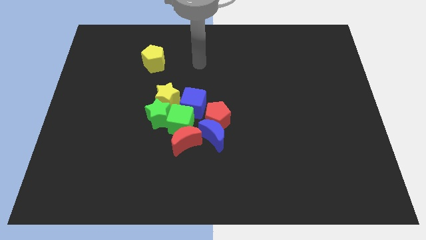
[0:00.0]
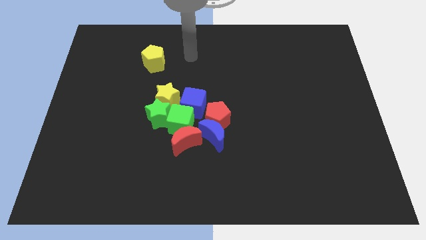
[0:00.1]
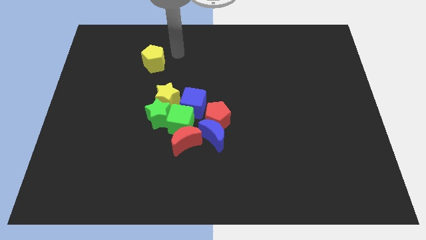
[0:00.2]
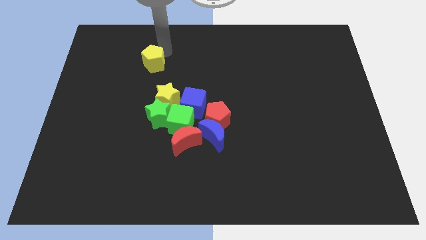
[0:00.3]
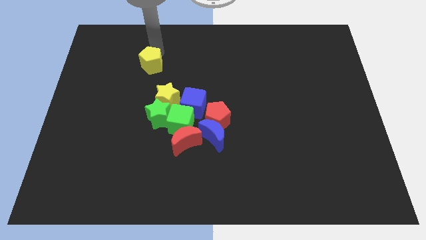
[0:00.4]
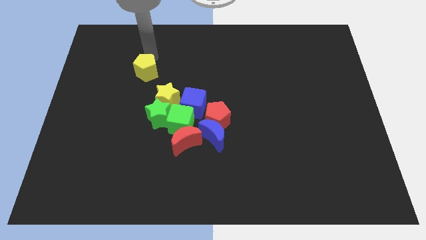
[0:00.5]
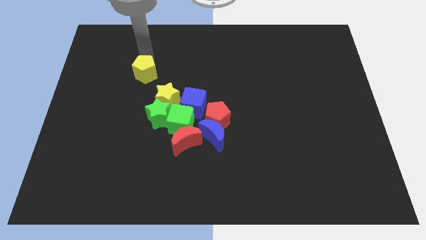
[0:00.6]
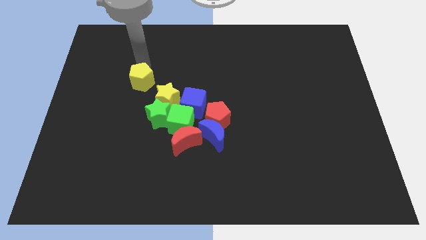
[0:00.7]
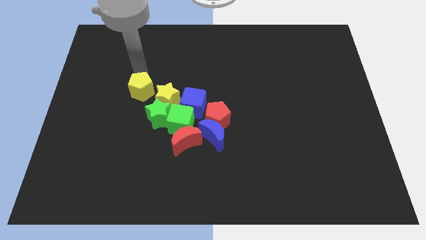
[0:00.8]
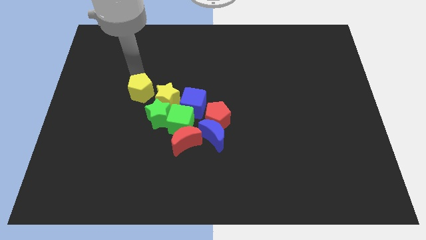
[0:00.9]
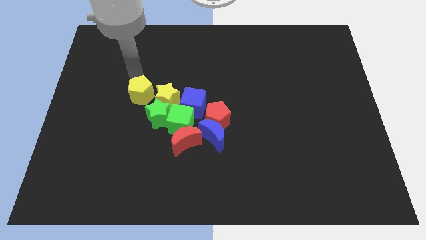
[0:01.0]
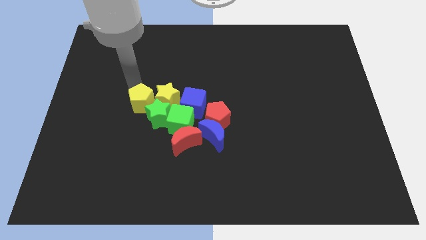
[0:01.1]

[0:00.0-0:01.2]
move the yellow pentagon to the left of the yellow star

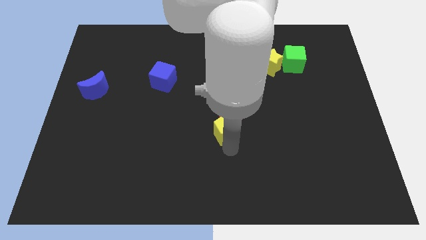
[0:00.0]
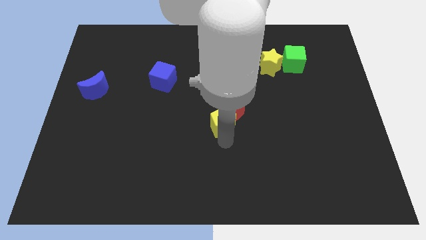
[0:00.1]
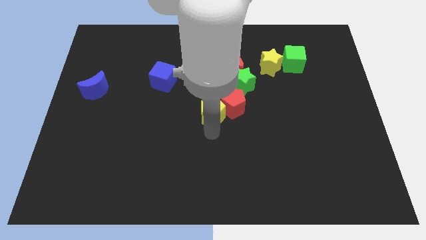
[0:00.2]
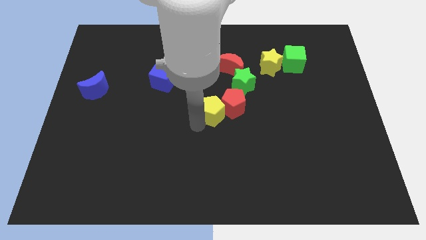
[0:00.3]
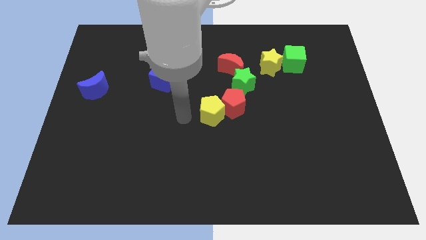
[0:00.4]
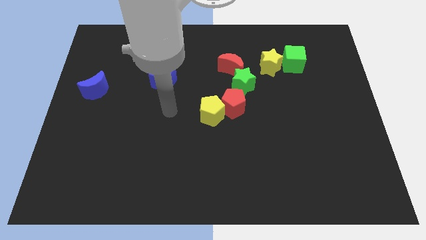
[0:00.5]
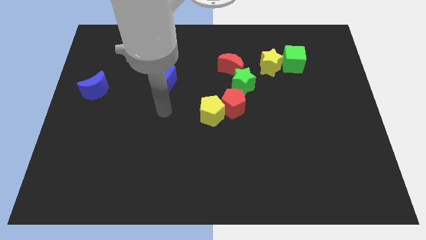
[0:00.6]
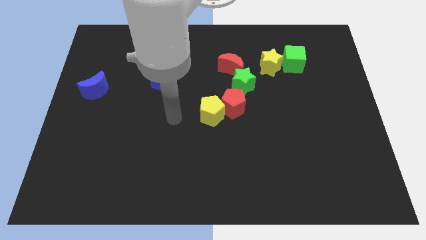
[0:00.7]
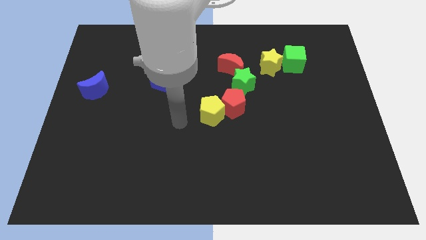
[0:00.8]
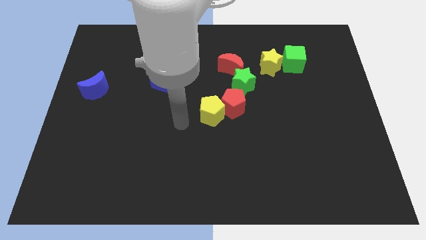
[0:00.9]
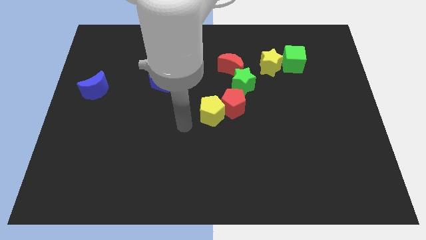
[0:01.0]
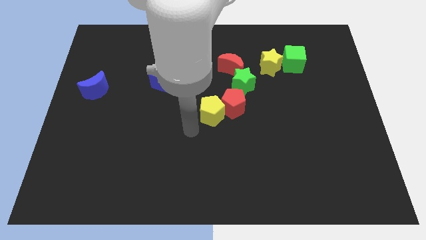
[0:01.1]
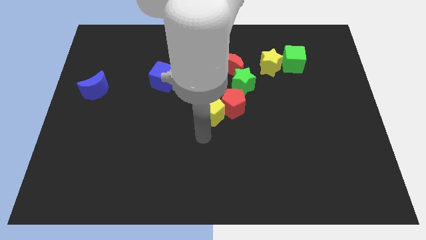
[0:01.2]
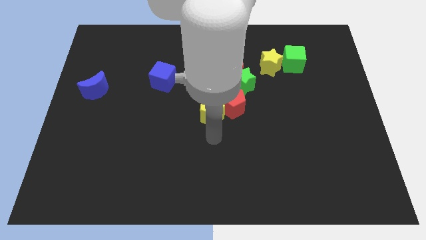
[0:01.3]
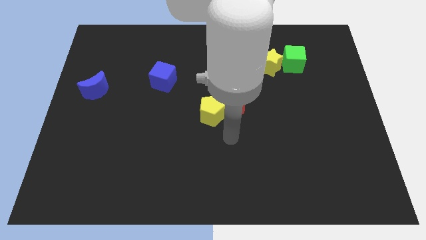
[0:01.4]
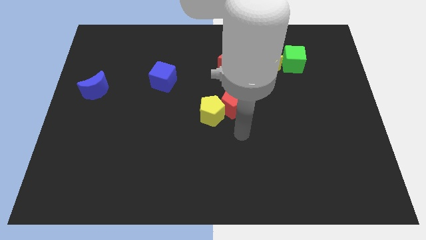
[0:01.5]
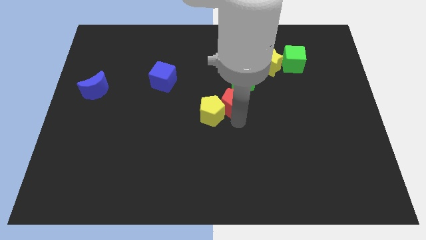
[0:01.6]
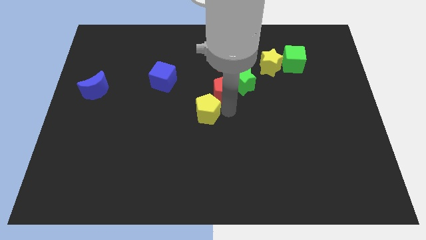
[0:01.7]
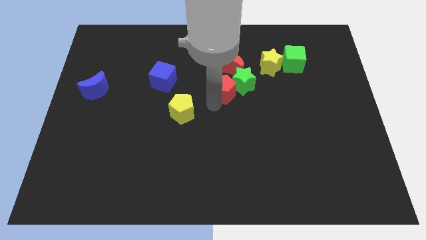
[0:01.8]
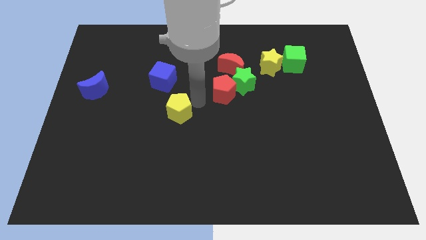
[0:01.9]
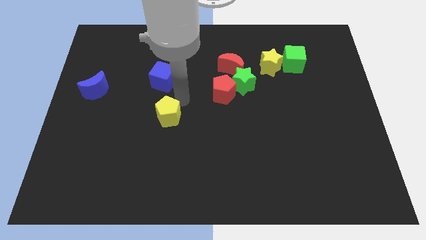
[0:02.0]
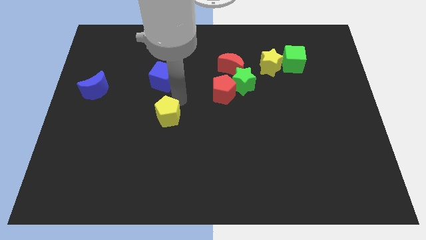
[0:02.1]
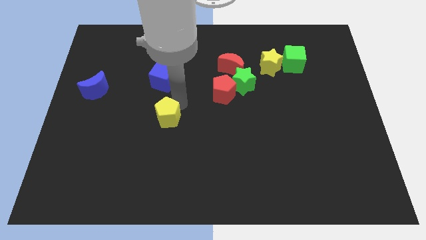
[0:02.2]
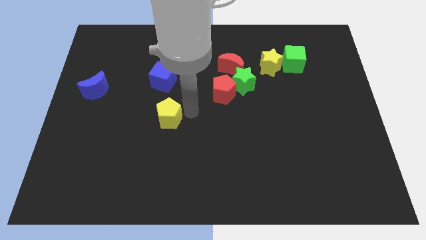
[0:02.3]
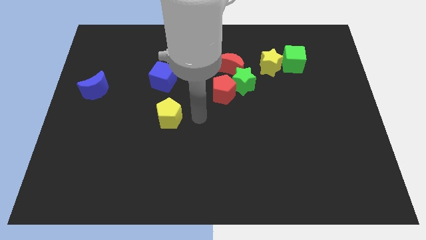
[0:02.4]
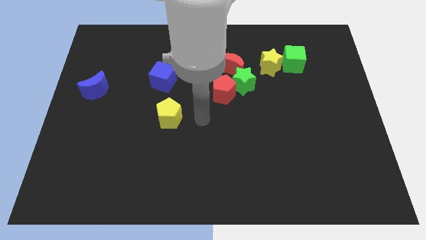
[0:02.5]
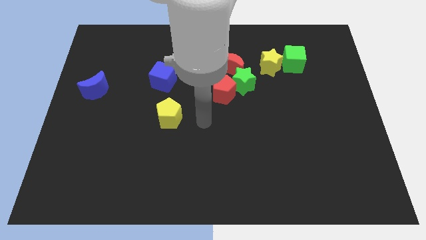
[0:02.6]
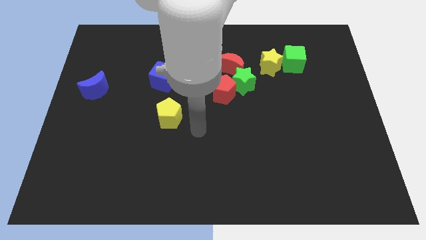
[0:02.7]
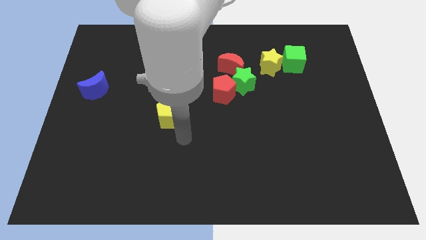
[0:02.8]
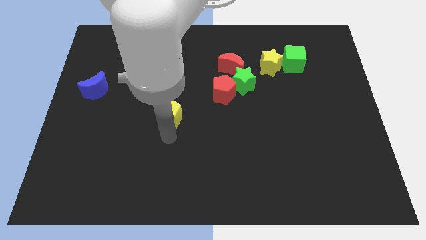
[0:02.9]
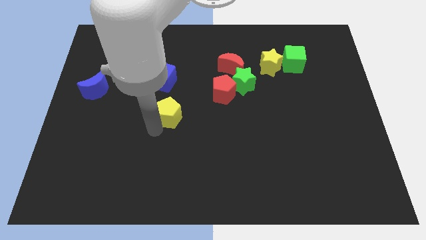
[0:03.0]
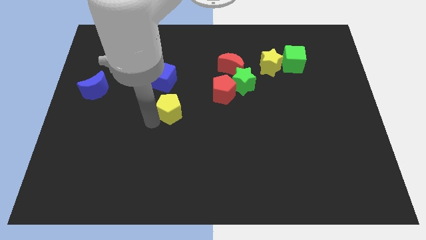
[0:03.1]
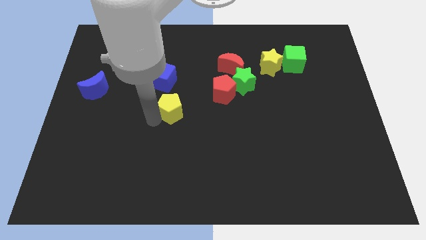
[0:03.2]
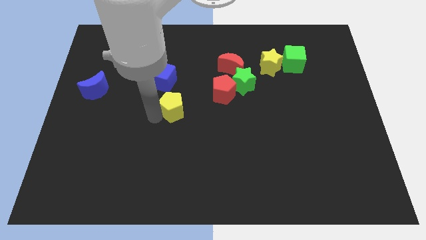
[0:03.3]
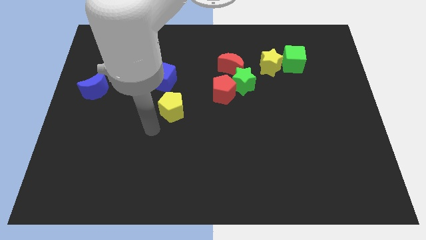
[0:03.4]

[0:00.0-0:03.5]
push the yellow pentagon bottom right to the blue cube

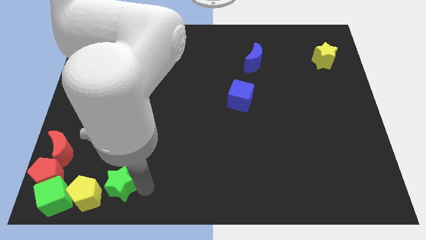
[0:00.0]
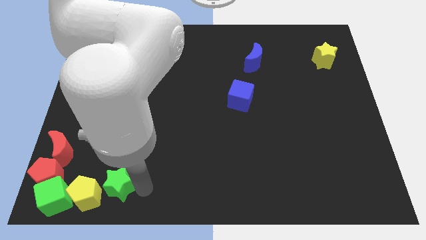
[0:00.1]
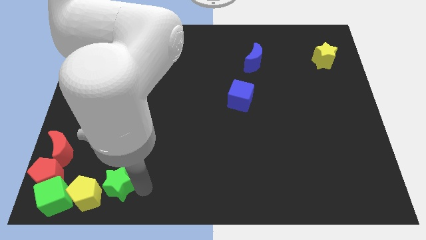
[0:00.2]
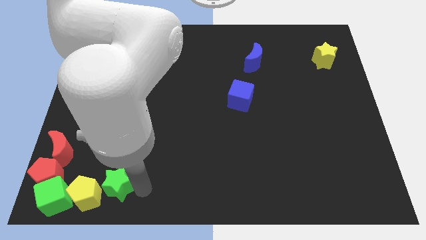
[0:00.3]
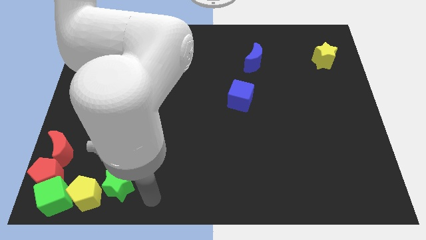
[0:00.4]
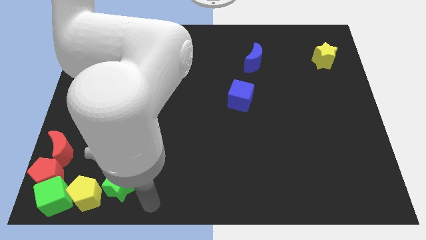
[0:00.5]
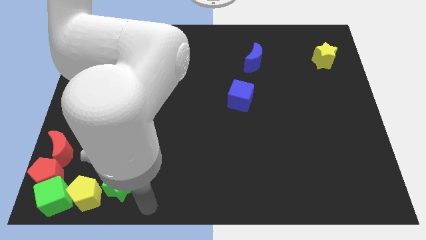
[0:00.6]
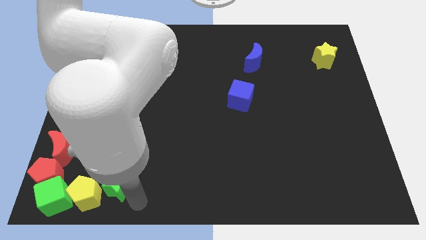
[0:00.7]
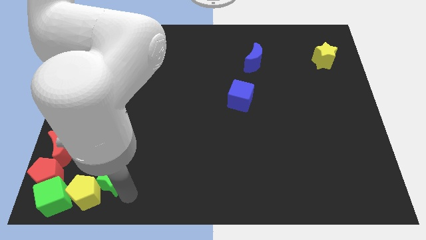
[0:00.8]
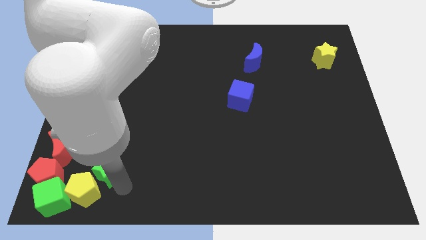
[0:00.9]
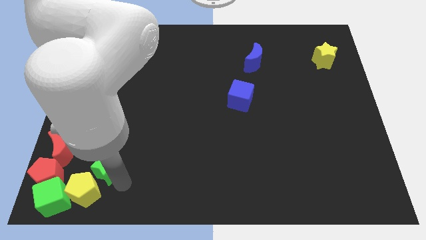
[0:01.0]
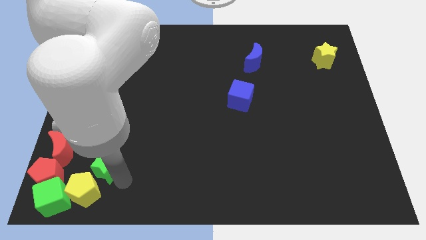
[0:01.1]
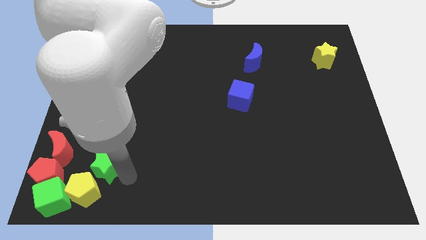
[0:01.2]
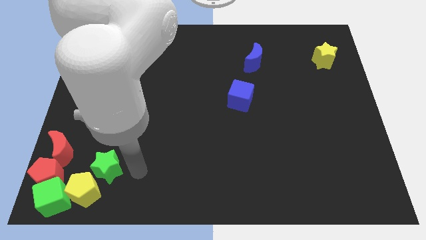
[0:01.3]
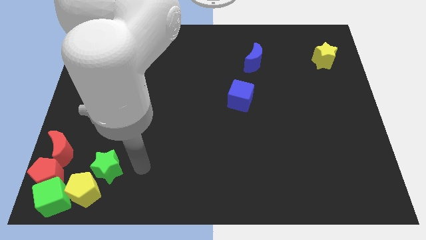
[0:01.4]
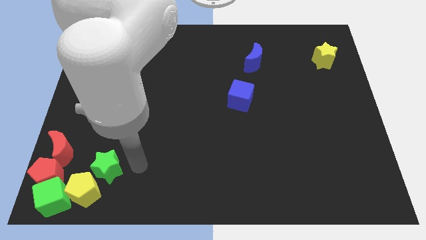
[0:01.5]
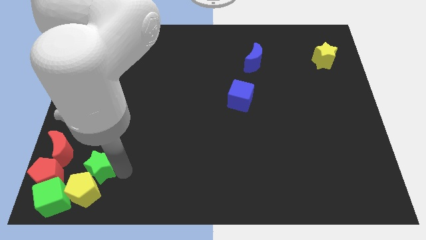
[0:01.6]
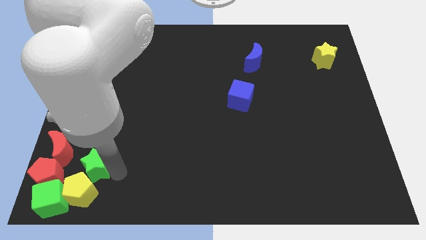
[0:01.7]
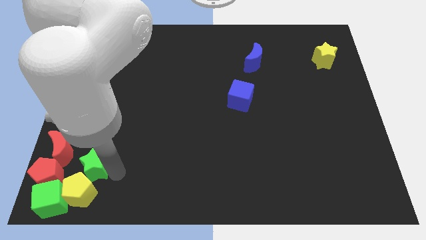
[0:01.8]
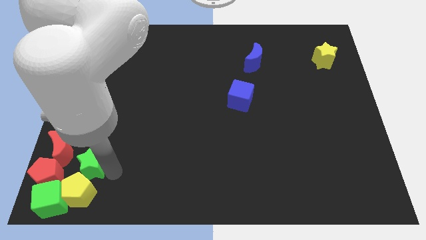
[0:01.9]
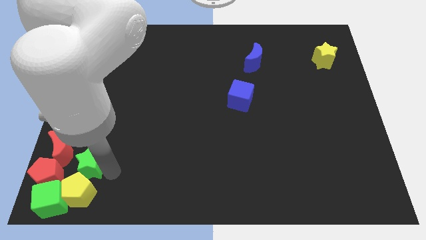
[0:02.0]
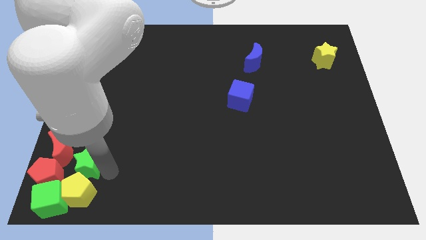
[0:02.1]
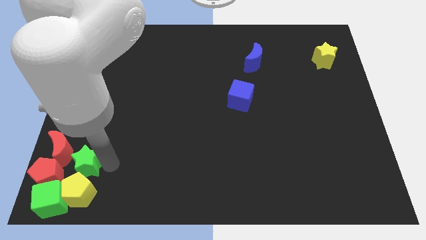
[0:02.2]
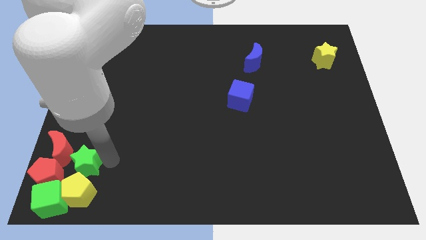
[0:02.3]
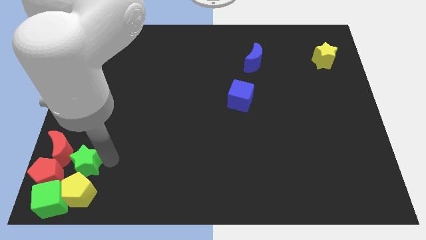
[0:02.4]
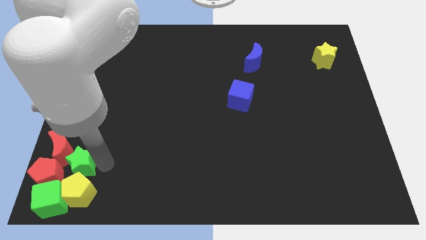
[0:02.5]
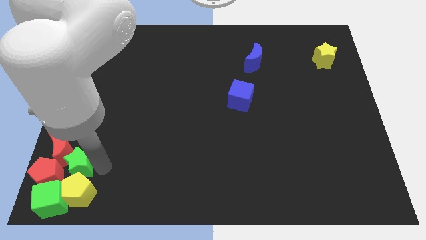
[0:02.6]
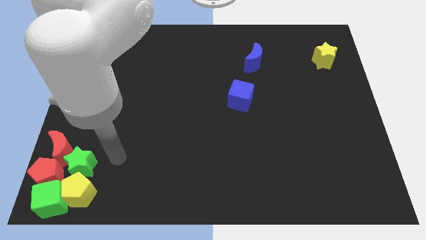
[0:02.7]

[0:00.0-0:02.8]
push the green star towards the right of red pentagon

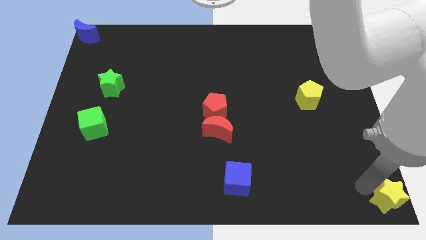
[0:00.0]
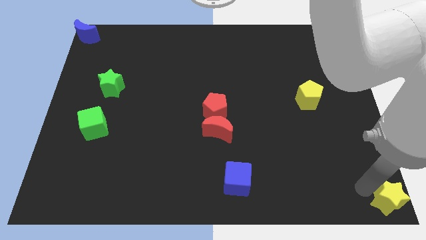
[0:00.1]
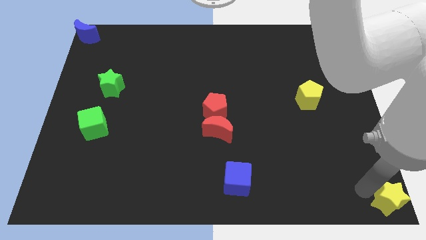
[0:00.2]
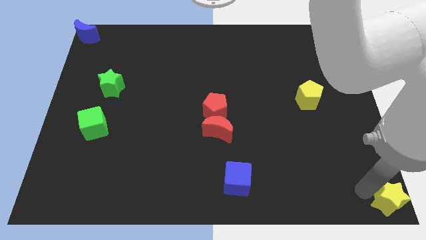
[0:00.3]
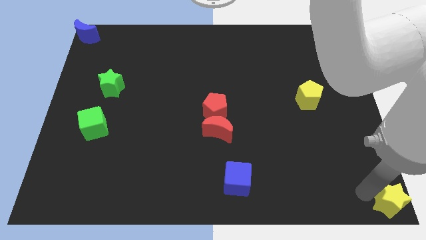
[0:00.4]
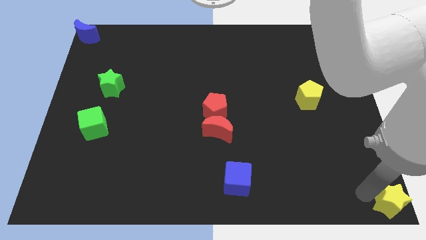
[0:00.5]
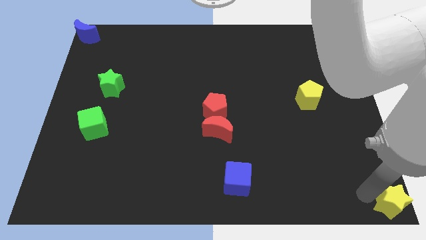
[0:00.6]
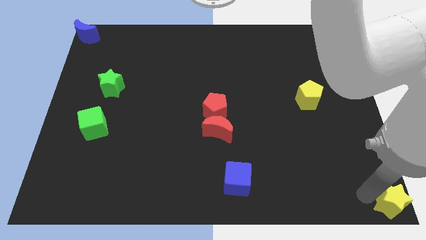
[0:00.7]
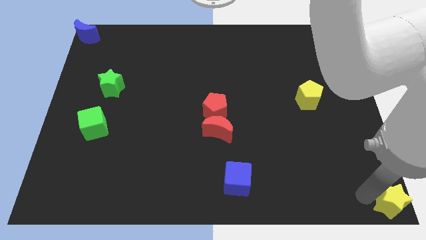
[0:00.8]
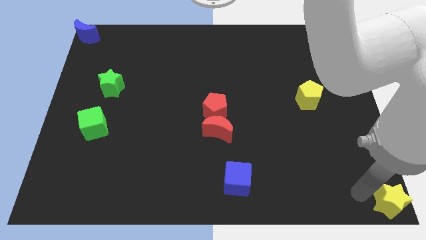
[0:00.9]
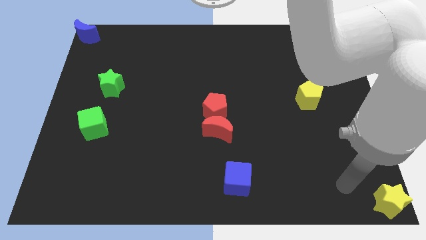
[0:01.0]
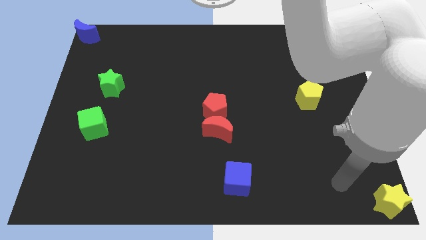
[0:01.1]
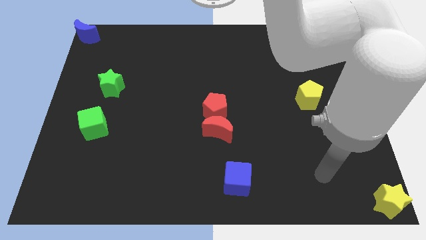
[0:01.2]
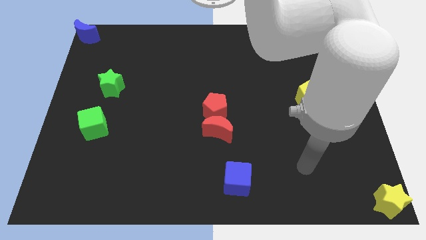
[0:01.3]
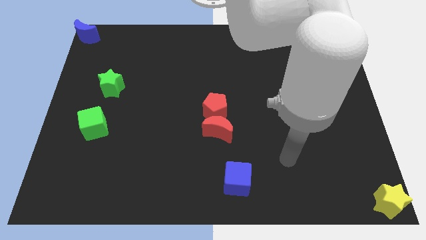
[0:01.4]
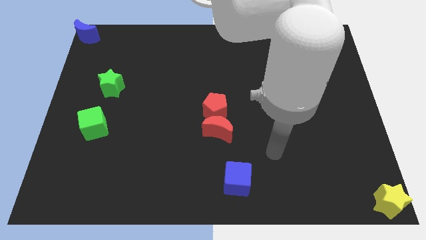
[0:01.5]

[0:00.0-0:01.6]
place yellow star at the right bottom corner of the board
